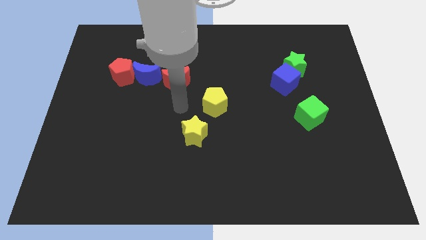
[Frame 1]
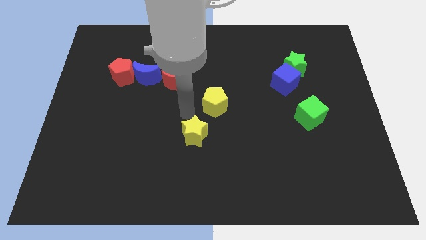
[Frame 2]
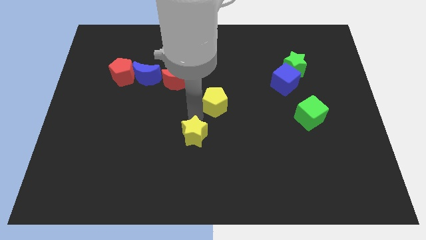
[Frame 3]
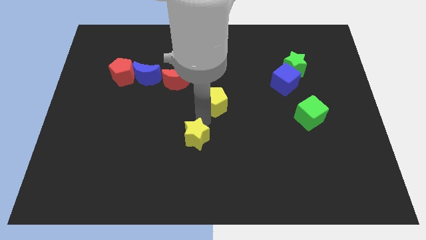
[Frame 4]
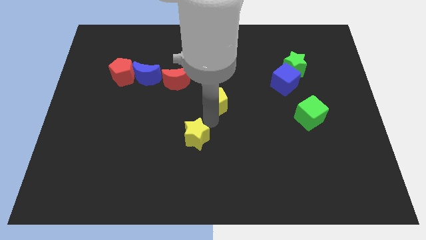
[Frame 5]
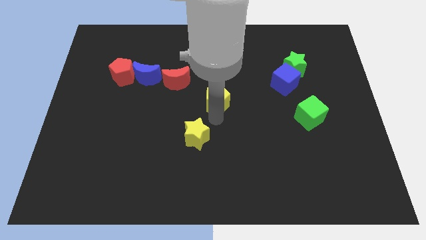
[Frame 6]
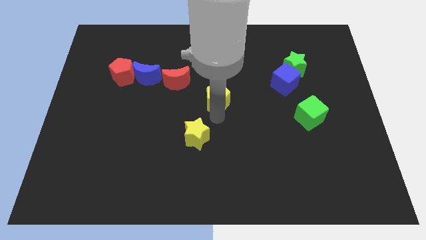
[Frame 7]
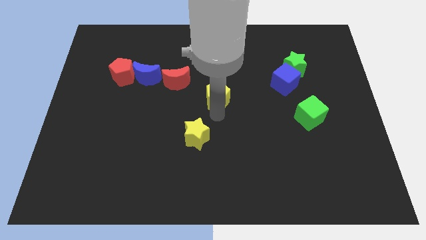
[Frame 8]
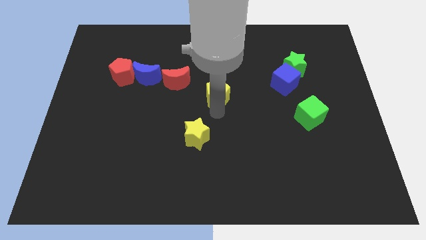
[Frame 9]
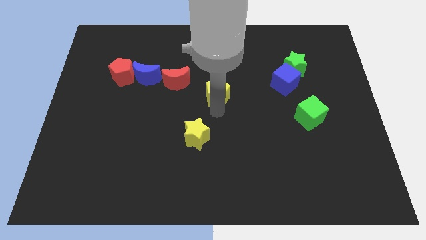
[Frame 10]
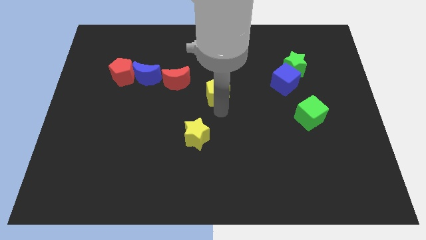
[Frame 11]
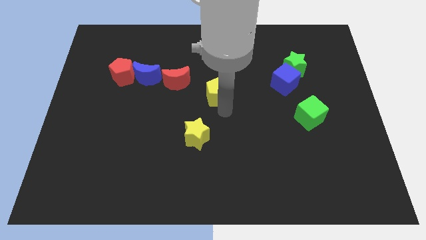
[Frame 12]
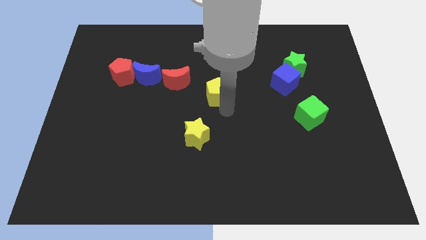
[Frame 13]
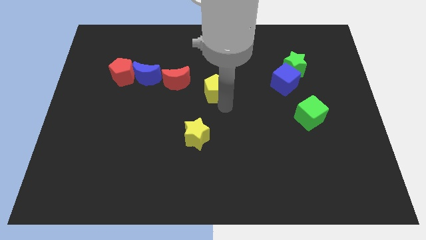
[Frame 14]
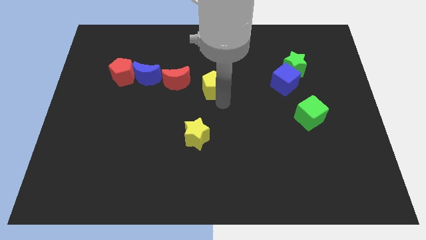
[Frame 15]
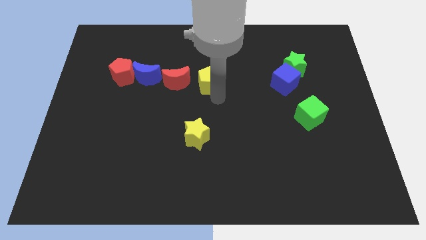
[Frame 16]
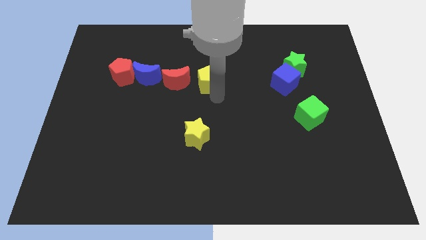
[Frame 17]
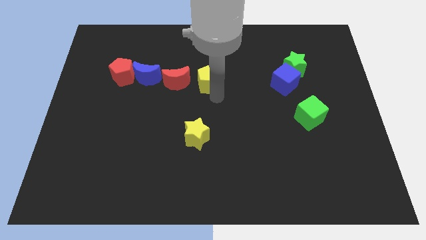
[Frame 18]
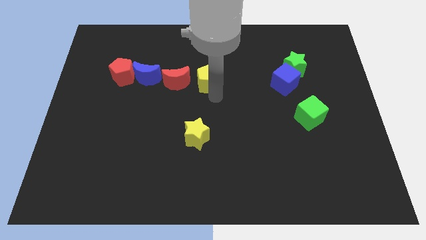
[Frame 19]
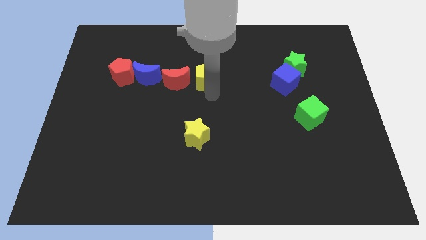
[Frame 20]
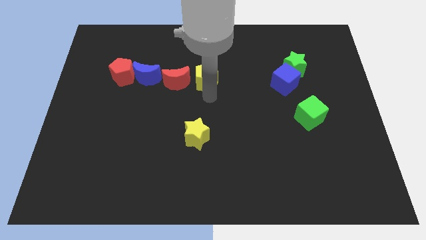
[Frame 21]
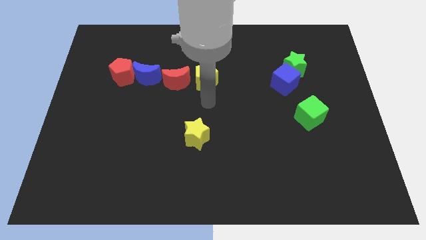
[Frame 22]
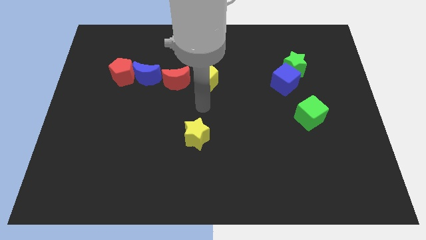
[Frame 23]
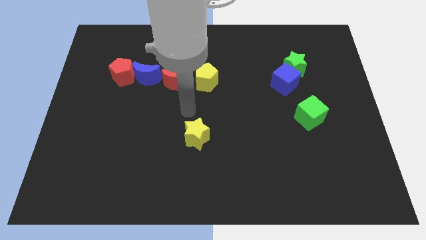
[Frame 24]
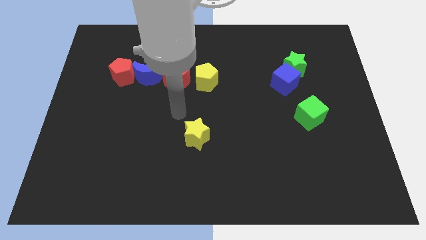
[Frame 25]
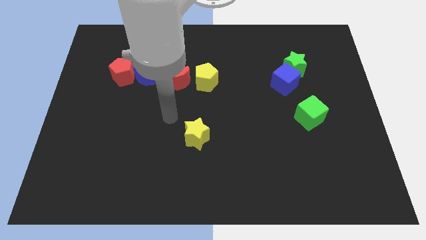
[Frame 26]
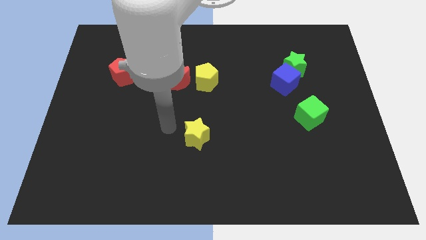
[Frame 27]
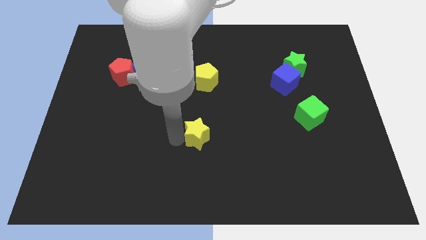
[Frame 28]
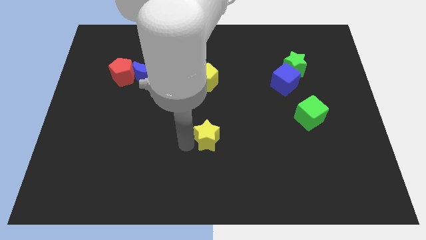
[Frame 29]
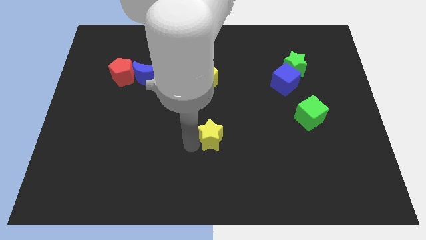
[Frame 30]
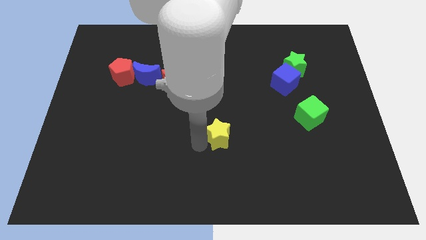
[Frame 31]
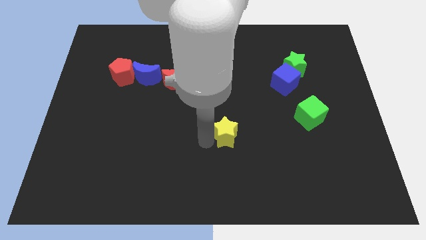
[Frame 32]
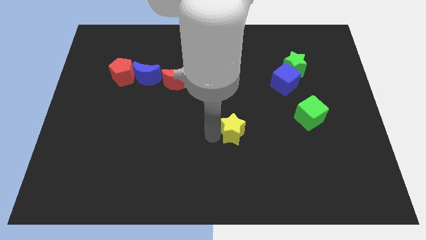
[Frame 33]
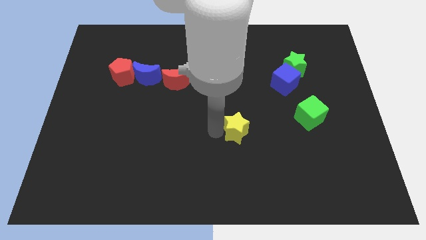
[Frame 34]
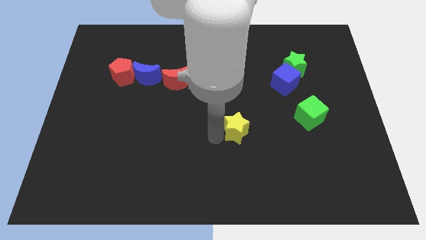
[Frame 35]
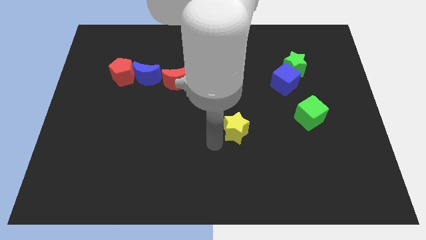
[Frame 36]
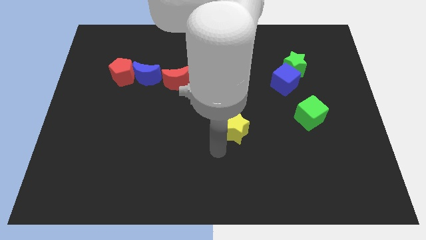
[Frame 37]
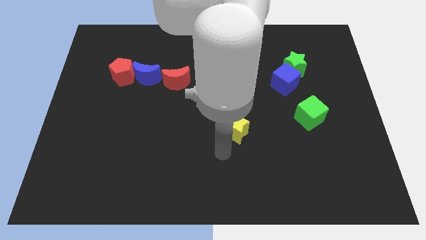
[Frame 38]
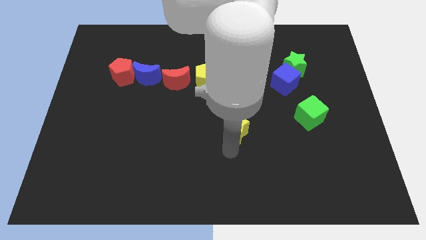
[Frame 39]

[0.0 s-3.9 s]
arrange both the yellow blocks diagonal to each other

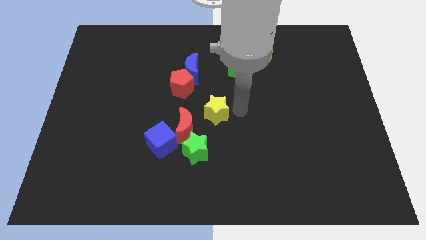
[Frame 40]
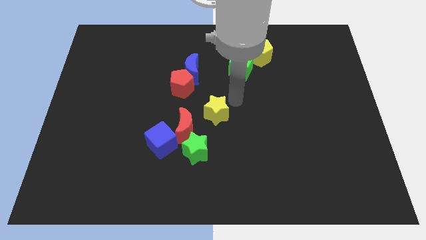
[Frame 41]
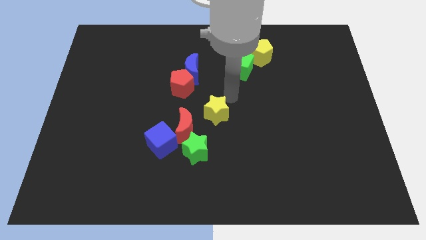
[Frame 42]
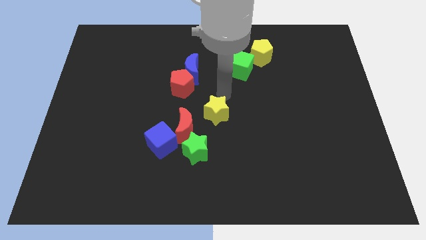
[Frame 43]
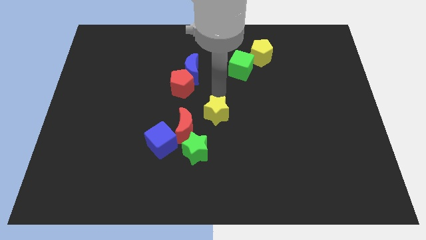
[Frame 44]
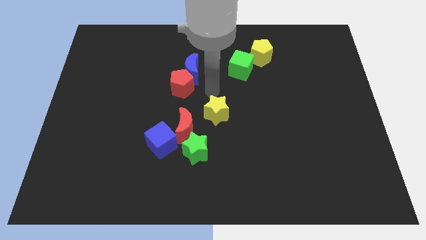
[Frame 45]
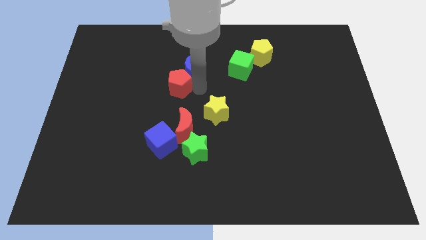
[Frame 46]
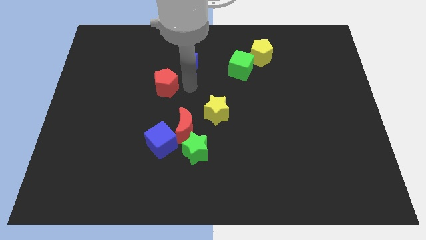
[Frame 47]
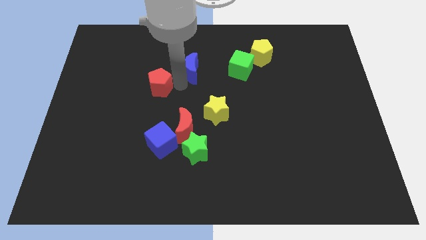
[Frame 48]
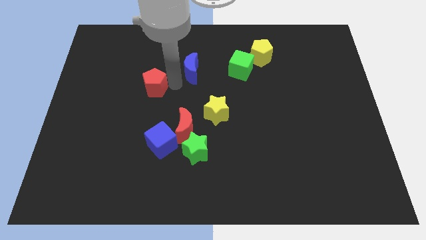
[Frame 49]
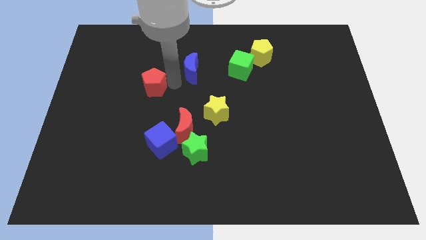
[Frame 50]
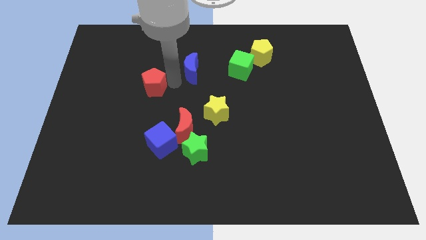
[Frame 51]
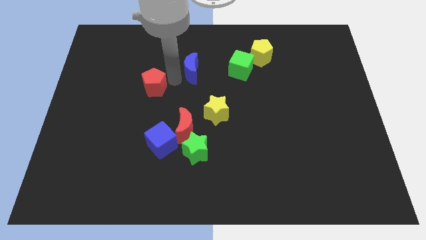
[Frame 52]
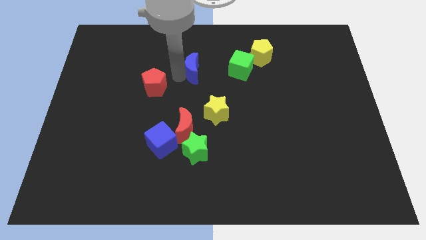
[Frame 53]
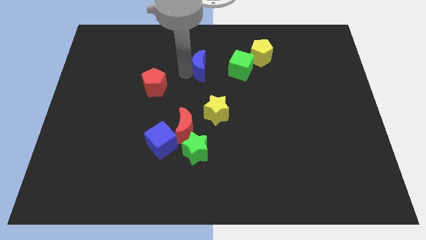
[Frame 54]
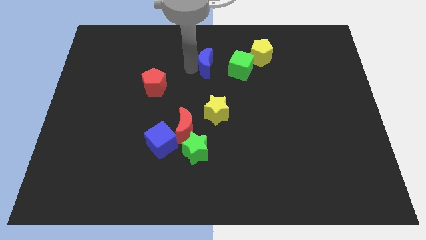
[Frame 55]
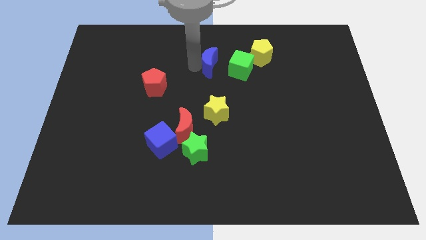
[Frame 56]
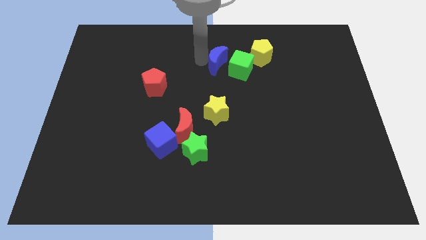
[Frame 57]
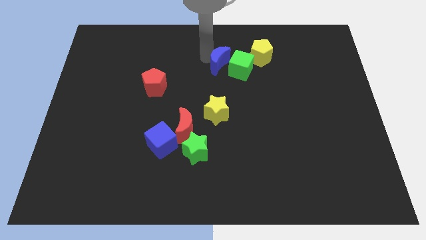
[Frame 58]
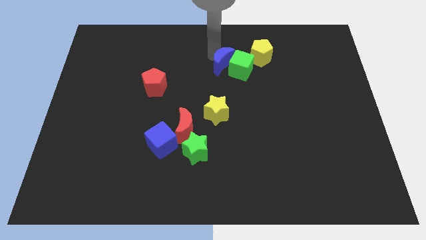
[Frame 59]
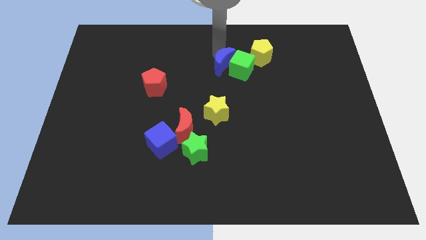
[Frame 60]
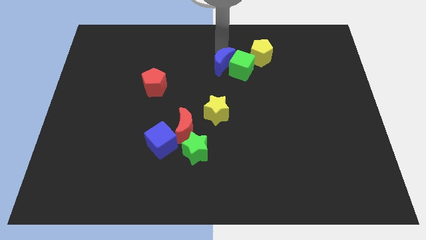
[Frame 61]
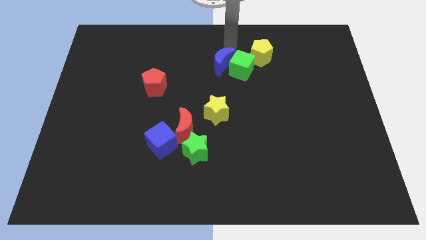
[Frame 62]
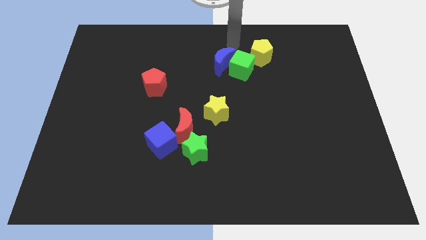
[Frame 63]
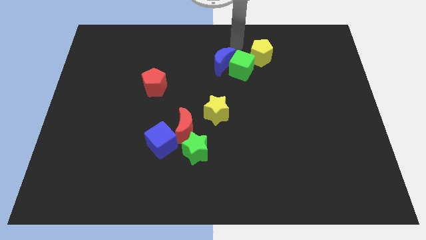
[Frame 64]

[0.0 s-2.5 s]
push the red pentagon to the left and blue moon into green cube

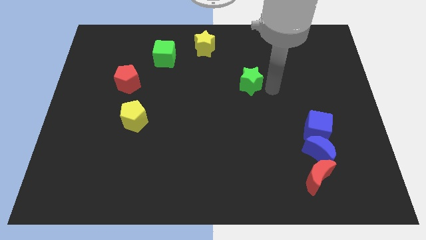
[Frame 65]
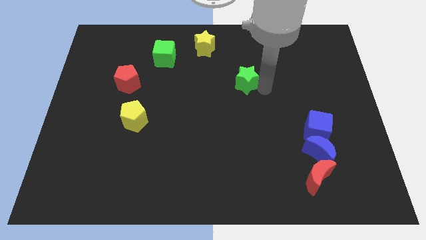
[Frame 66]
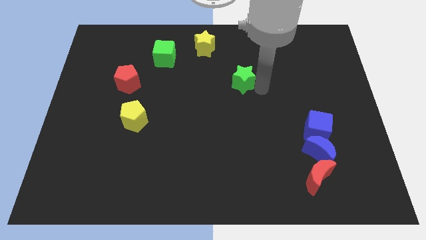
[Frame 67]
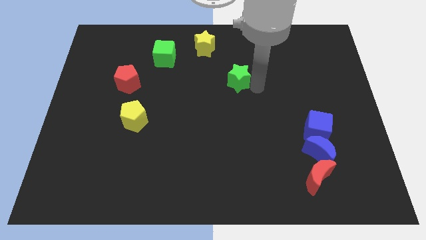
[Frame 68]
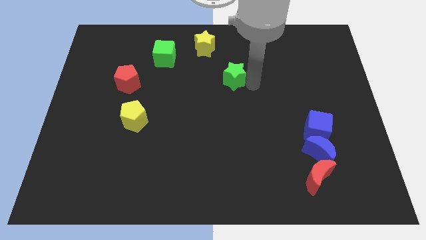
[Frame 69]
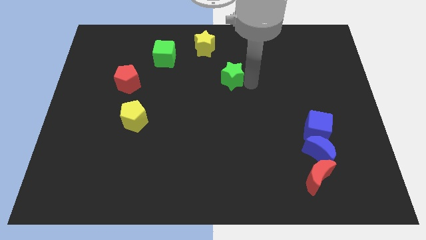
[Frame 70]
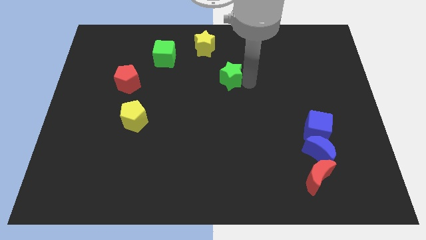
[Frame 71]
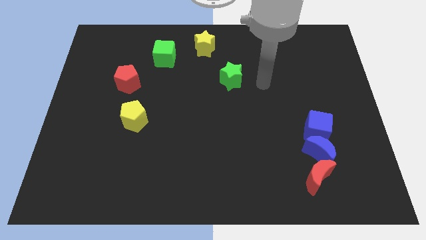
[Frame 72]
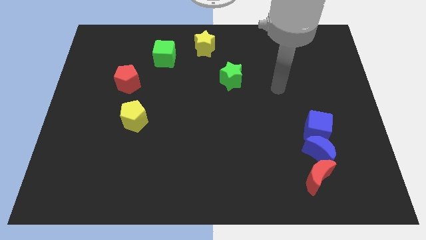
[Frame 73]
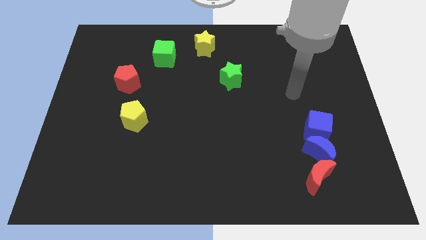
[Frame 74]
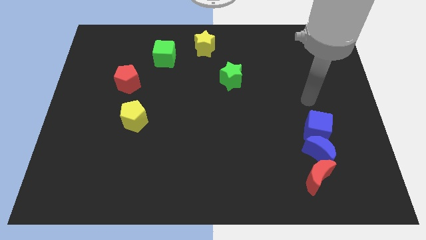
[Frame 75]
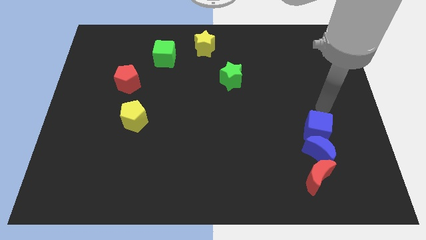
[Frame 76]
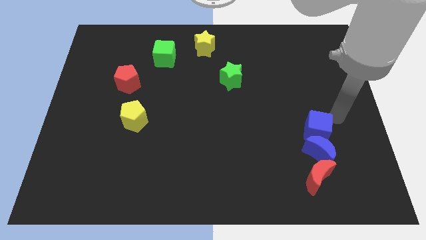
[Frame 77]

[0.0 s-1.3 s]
slide the green star diagonally bottom right to yellow star

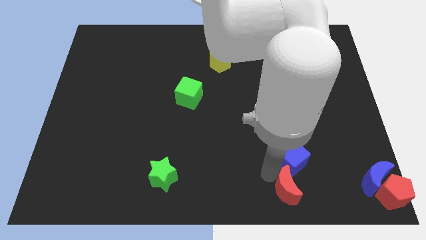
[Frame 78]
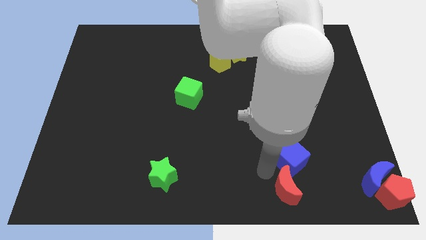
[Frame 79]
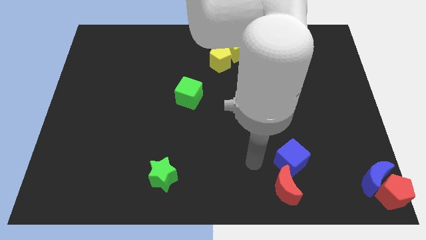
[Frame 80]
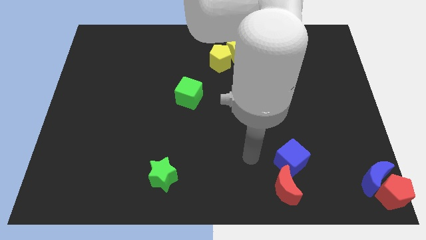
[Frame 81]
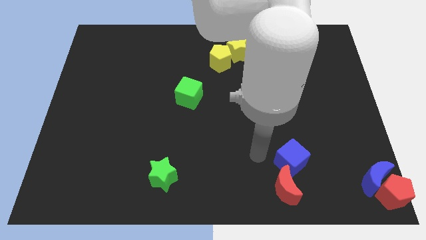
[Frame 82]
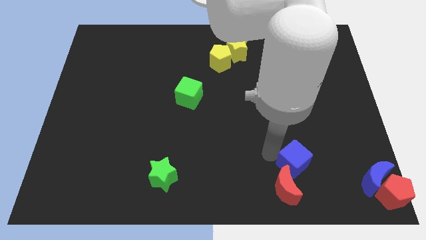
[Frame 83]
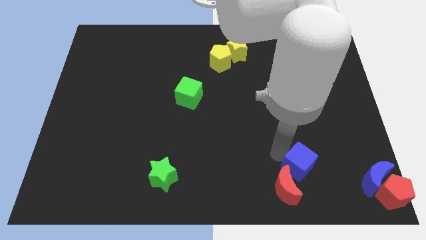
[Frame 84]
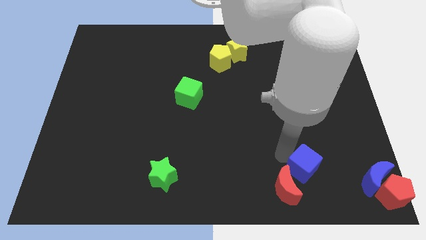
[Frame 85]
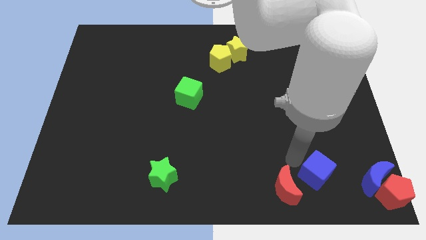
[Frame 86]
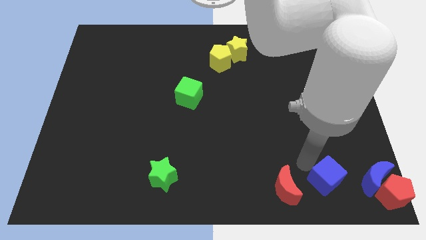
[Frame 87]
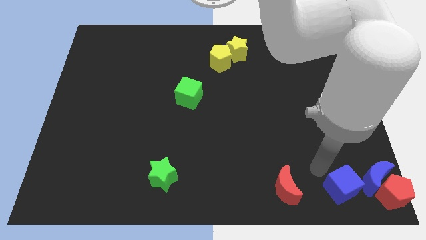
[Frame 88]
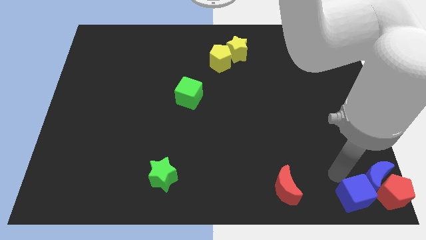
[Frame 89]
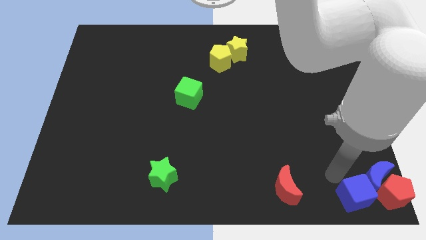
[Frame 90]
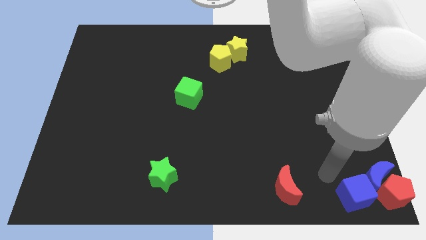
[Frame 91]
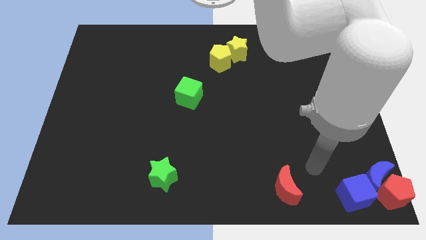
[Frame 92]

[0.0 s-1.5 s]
separate blue cube from red moon
